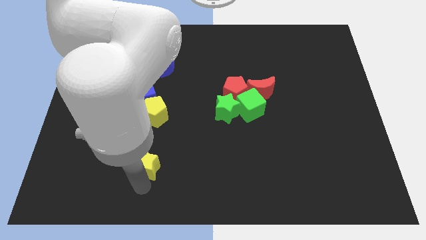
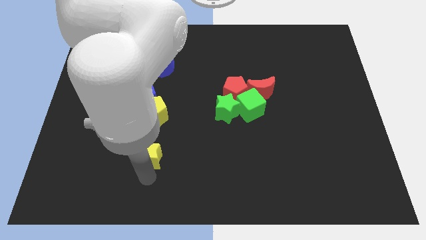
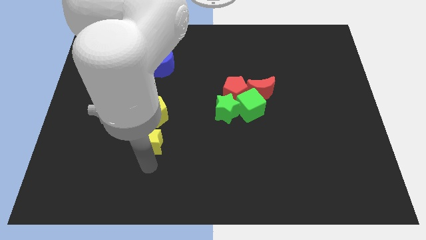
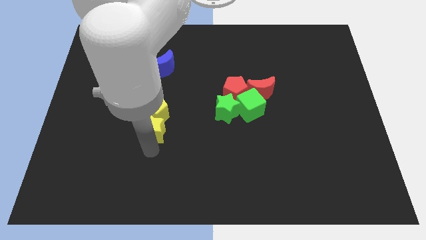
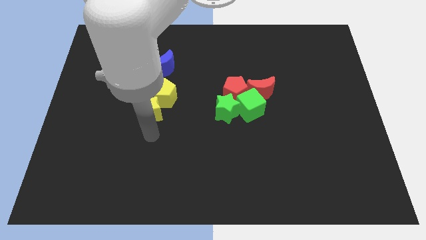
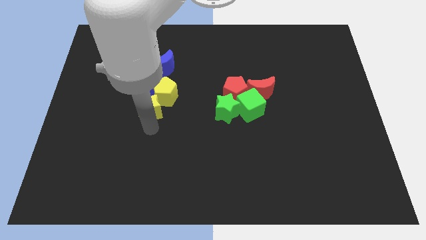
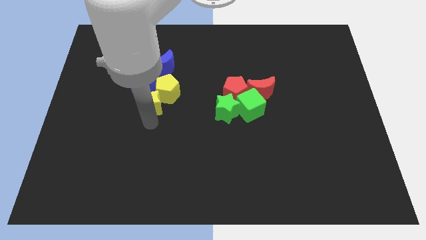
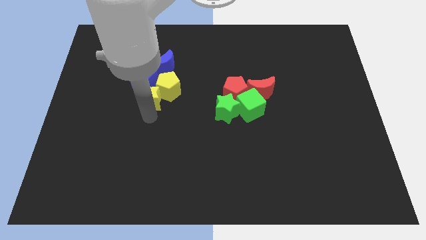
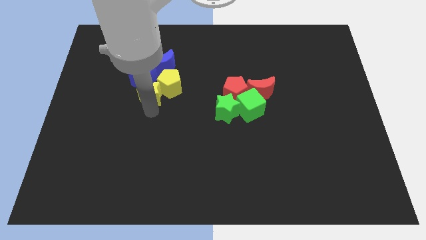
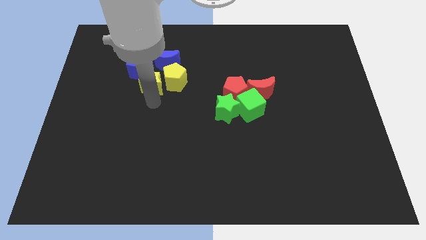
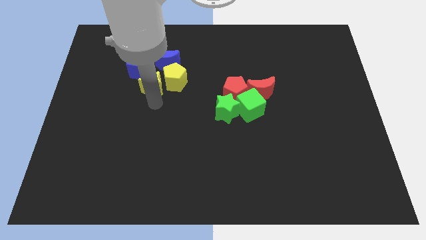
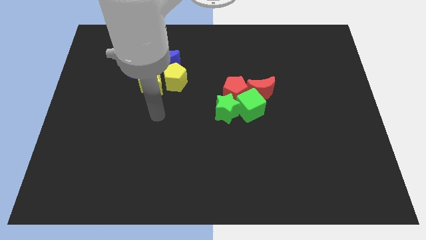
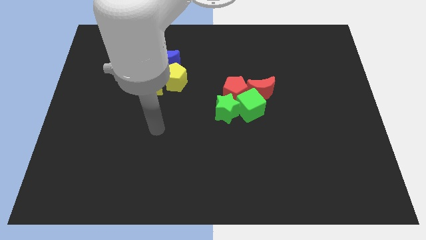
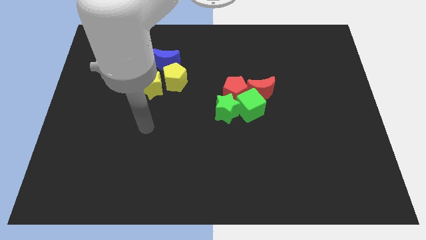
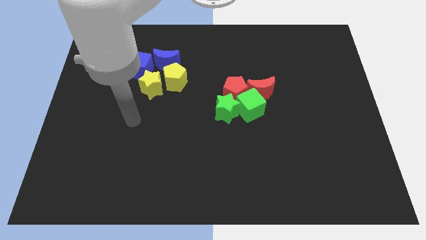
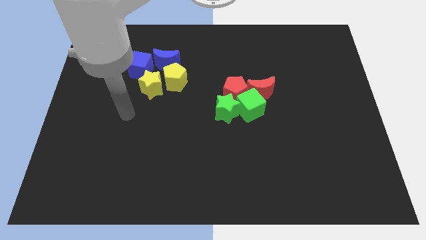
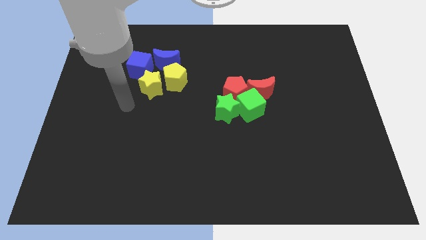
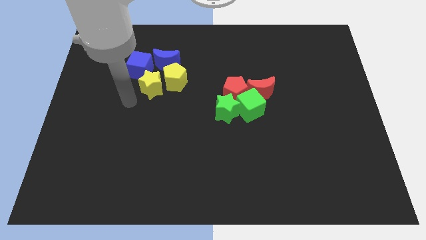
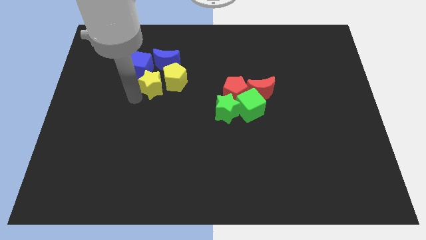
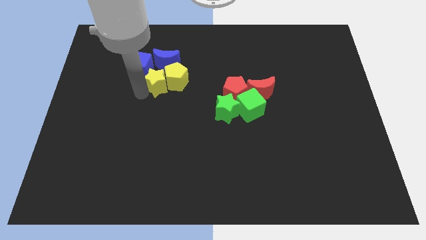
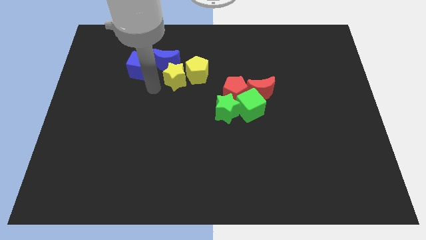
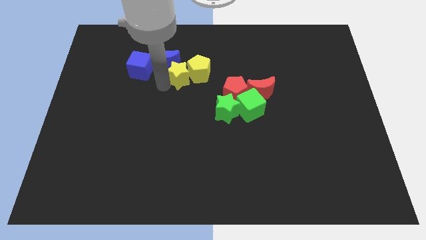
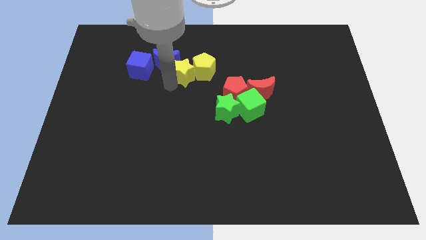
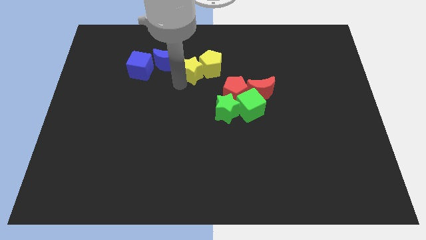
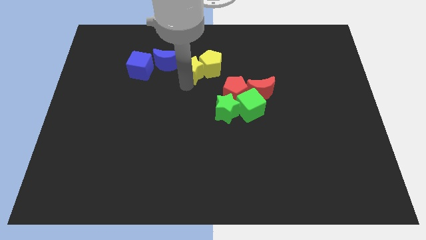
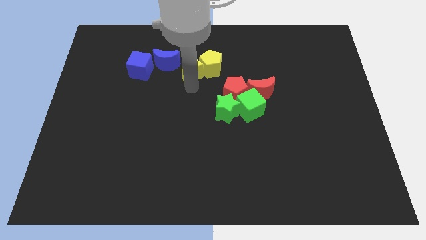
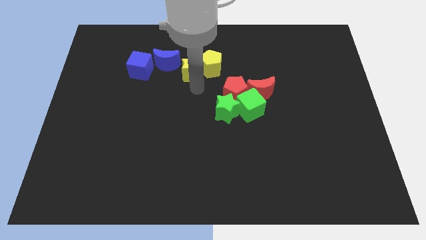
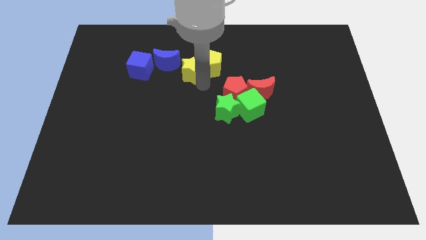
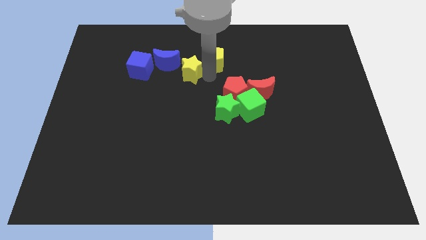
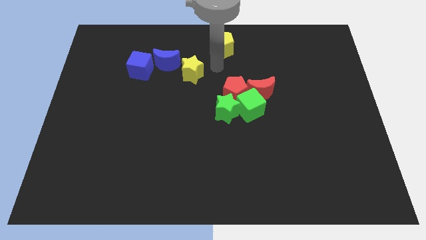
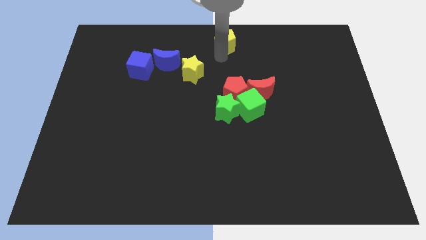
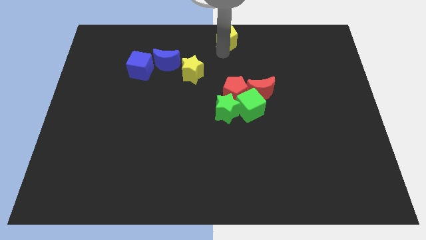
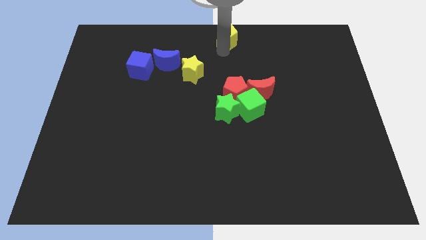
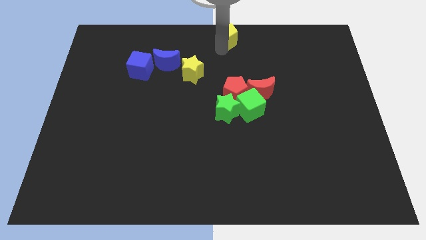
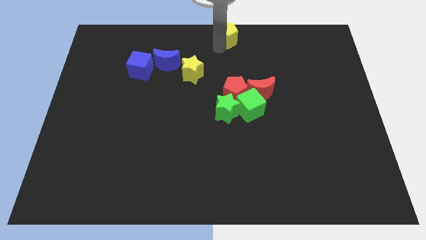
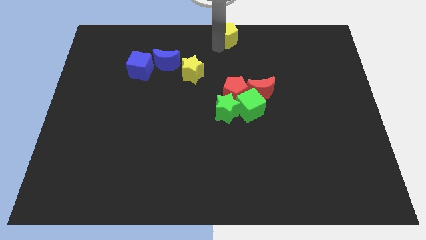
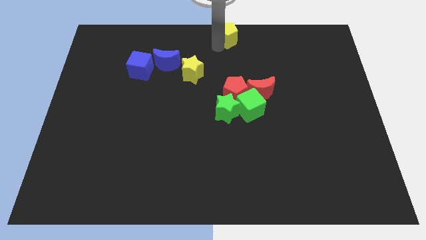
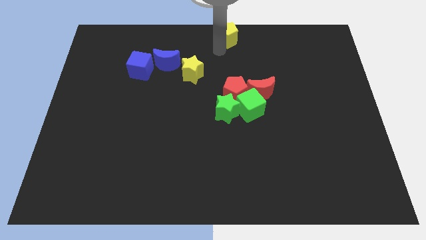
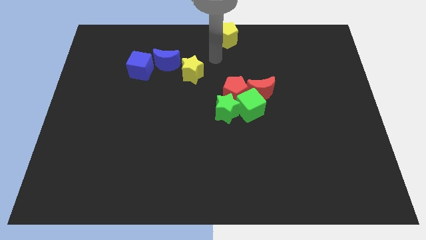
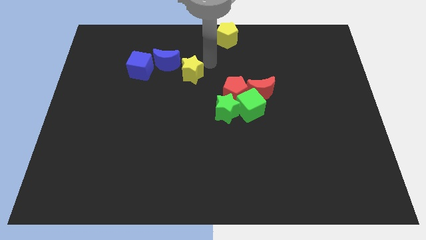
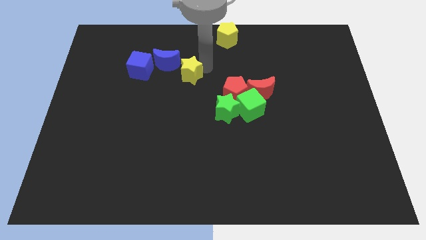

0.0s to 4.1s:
push the yellow pentagon to the center top of the board

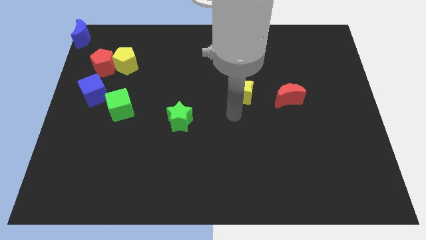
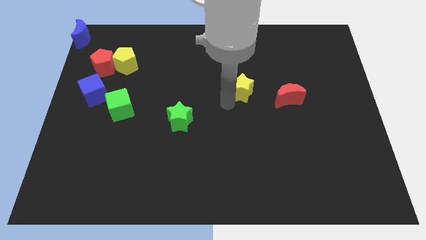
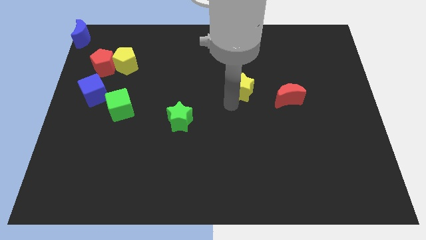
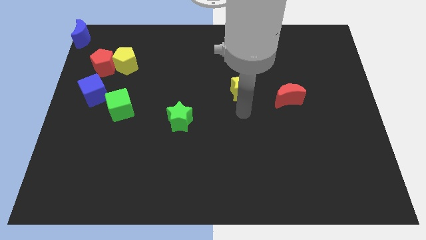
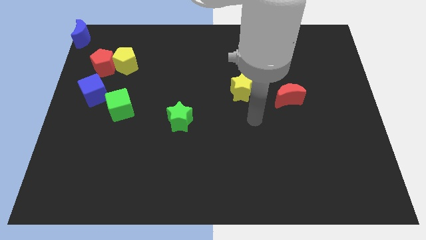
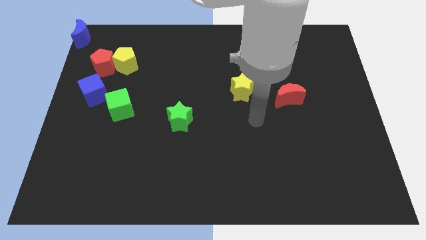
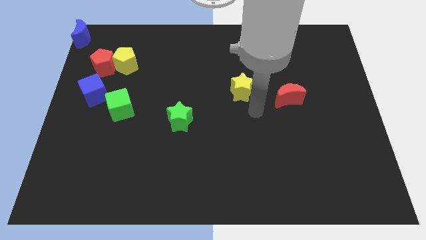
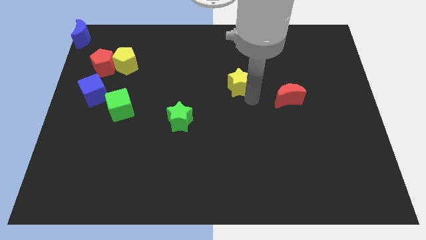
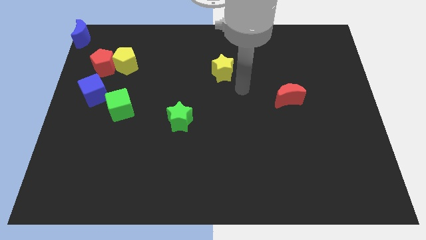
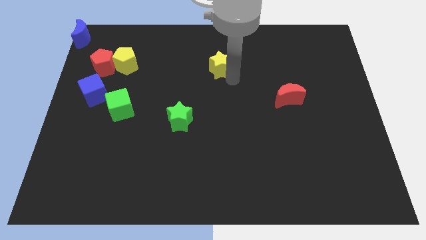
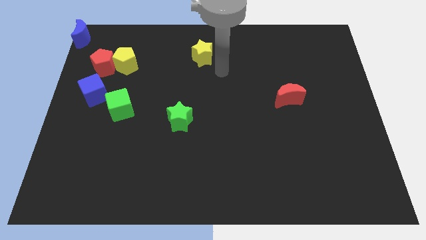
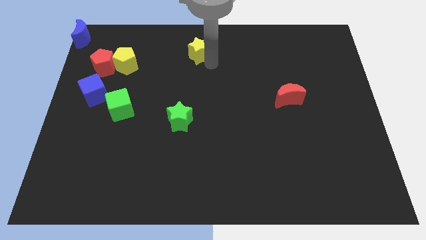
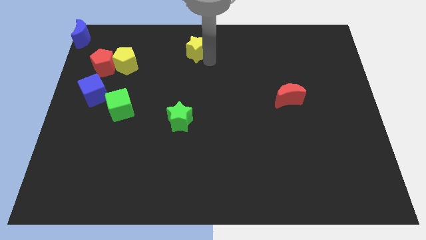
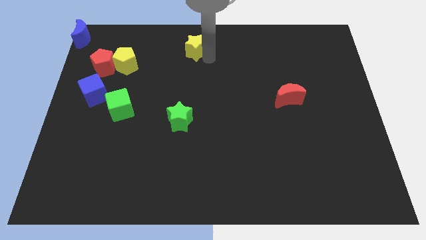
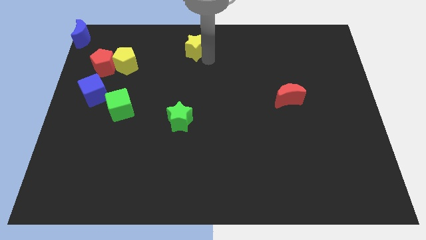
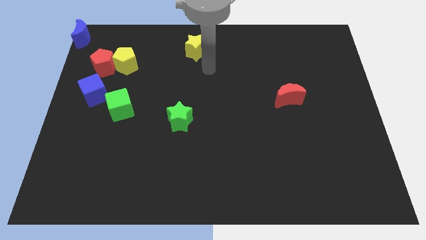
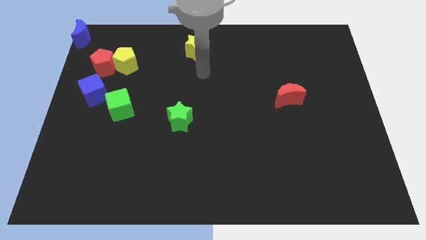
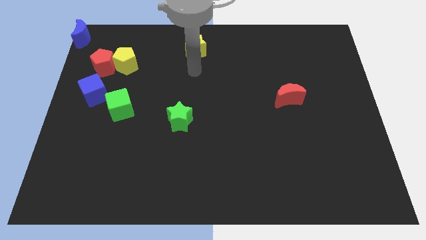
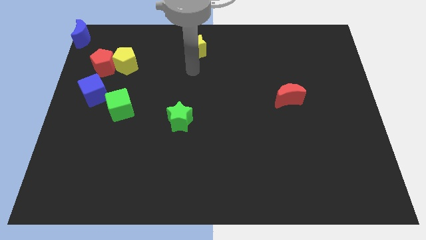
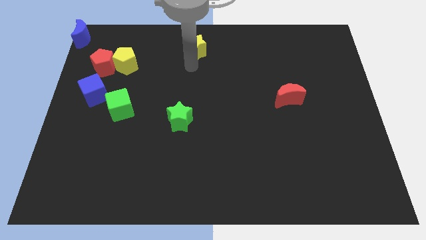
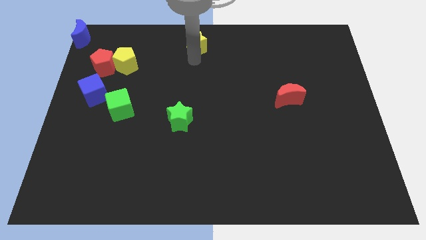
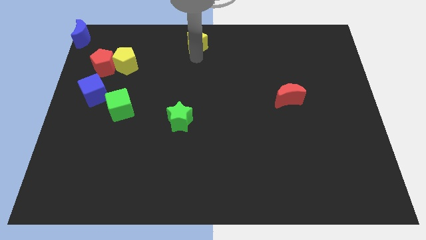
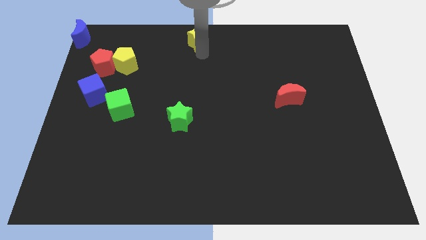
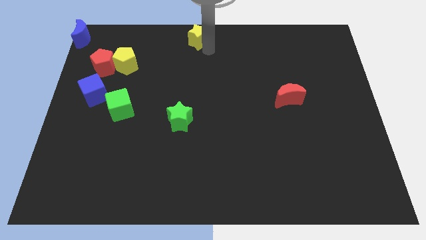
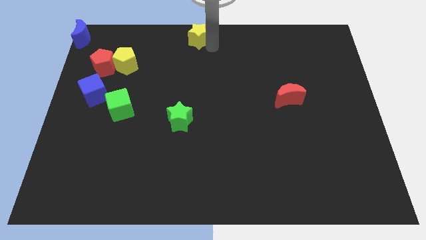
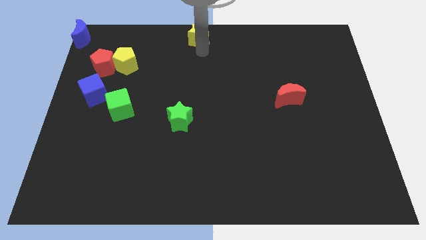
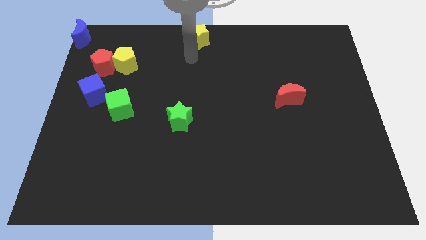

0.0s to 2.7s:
move the yellow star to the top middle of the board

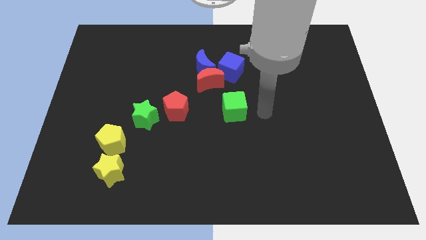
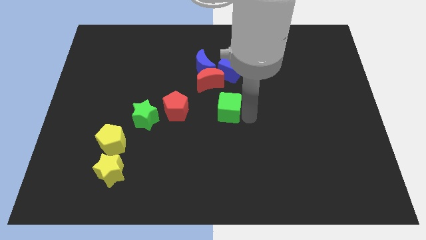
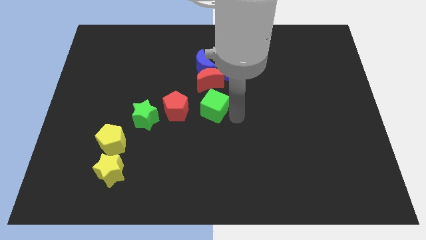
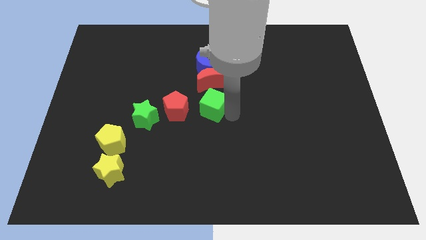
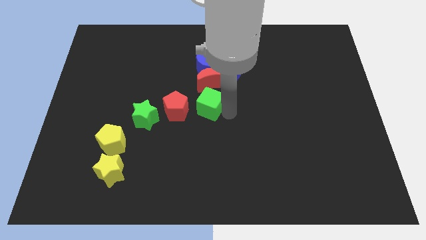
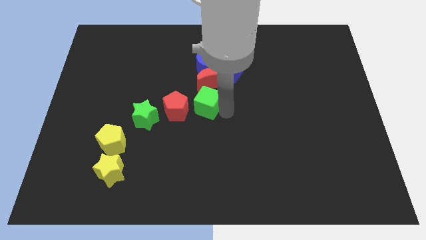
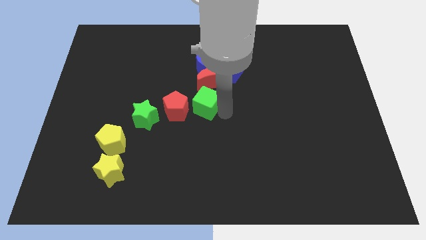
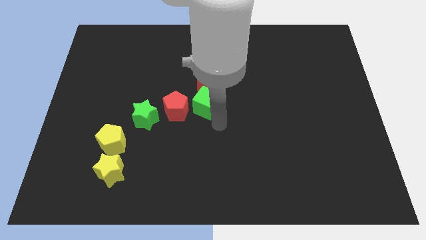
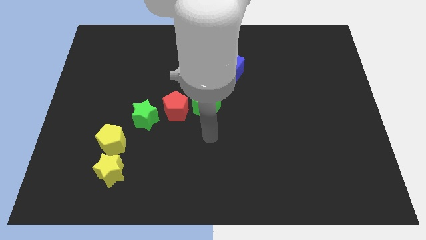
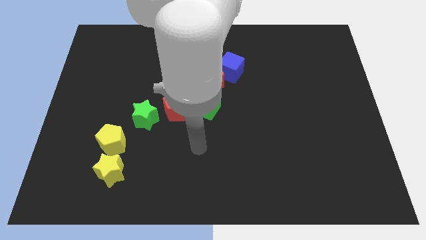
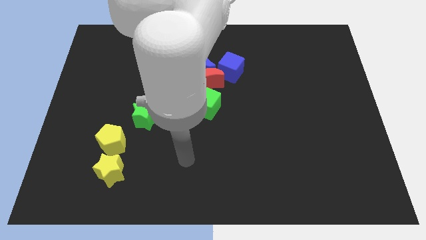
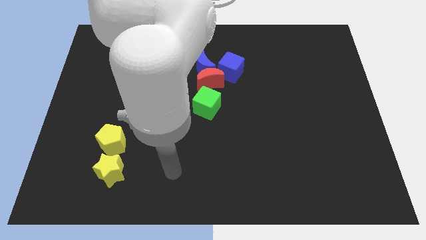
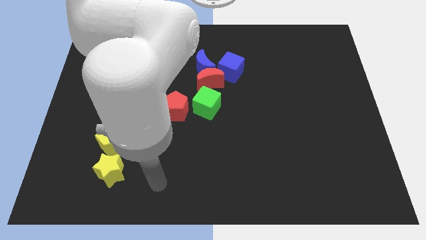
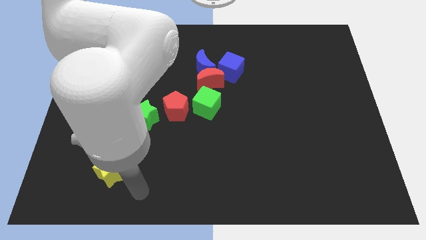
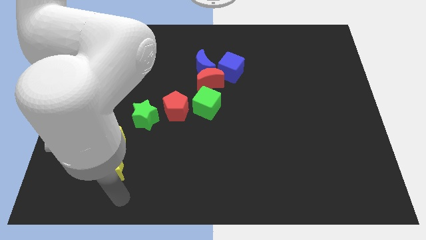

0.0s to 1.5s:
move the green cube to the right side of red pentagon

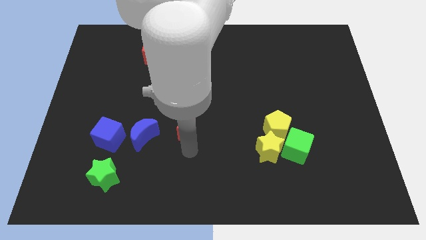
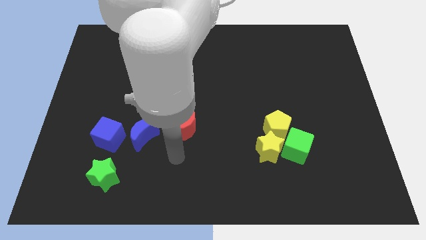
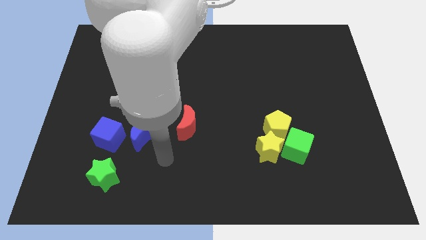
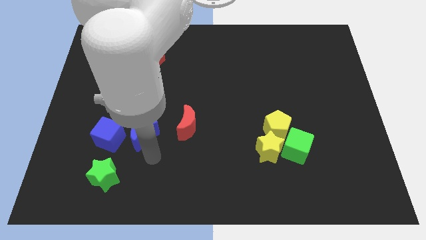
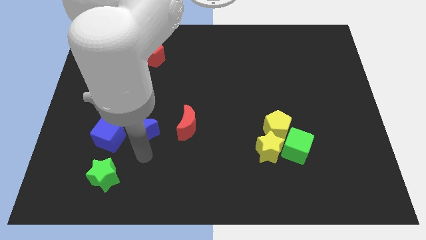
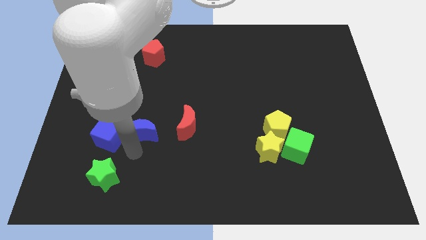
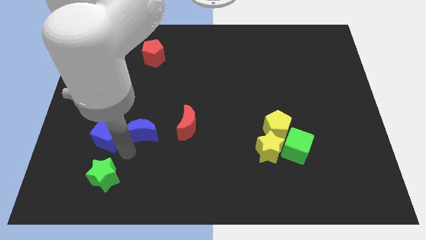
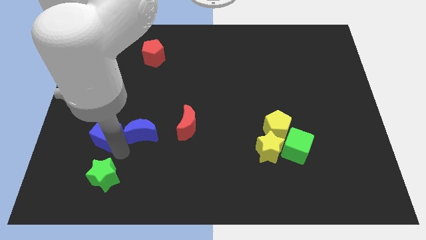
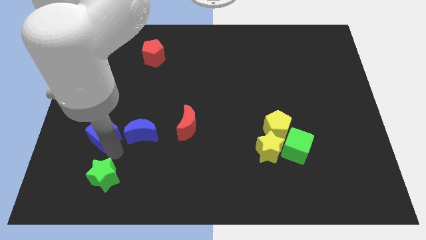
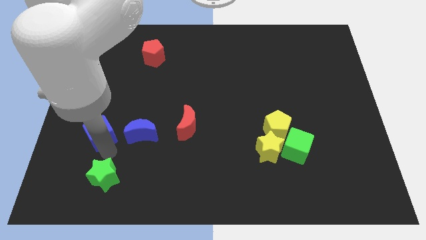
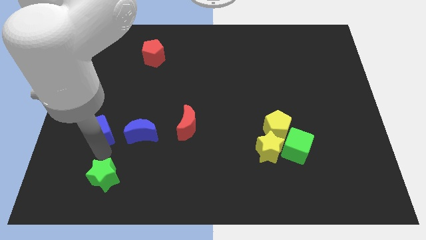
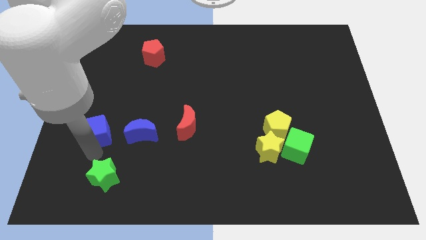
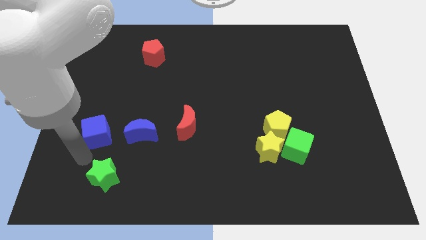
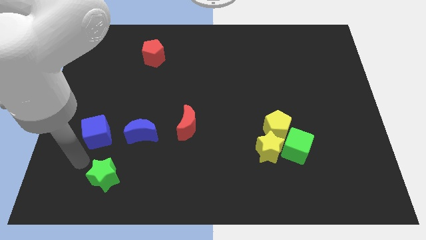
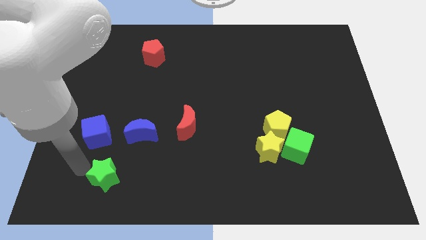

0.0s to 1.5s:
tap at the bottom sides of the blue crescent and blue cube
